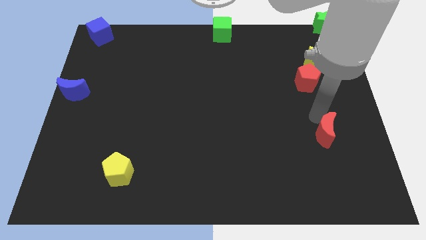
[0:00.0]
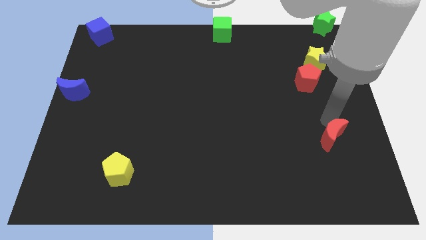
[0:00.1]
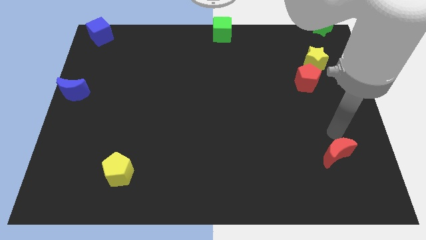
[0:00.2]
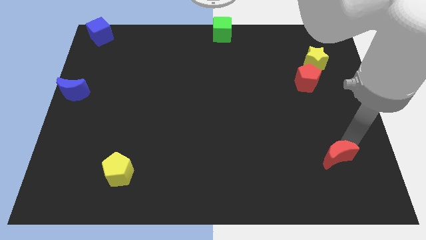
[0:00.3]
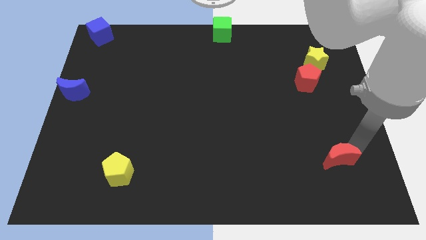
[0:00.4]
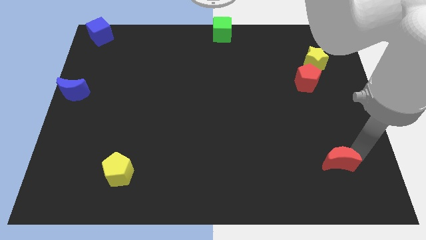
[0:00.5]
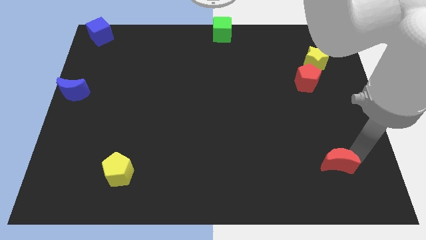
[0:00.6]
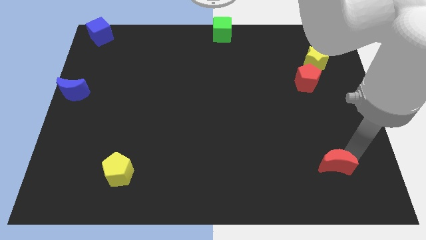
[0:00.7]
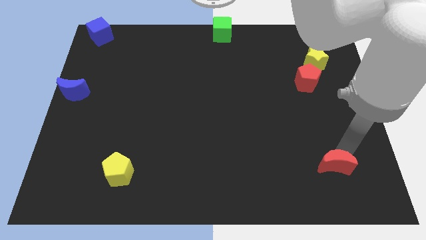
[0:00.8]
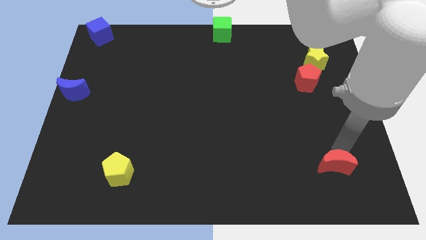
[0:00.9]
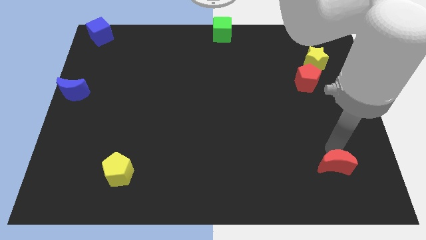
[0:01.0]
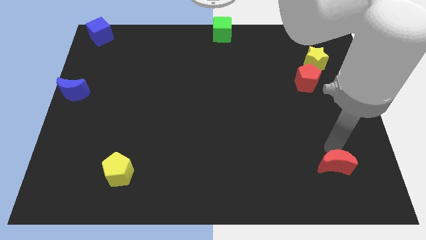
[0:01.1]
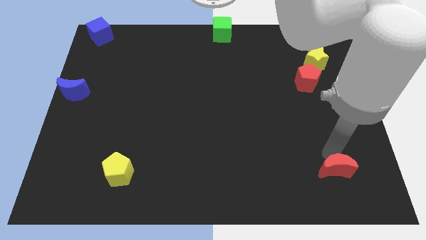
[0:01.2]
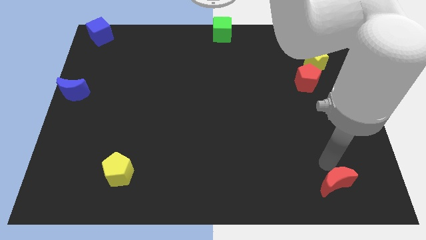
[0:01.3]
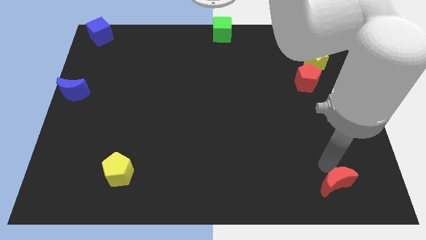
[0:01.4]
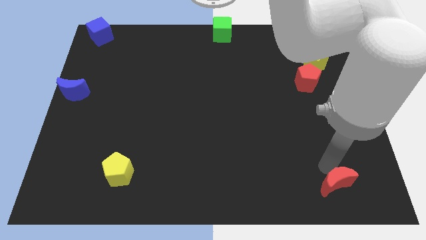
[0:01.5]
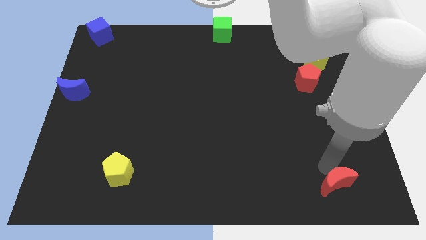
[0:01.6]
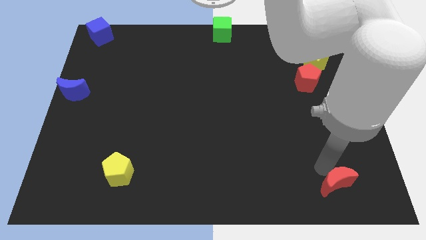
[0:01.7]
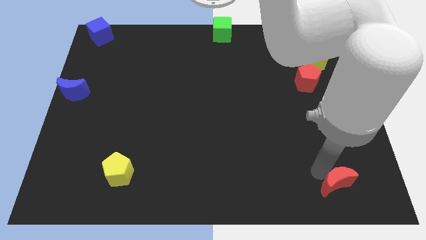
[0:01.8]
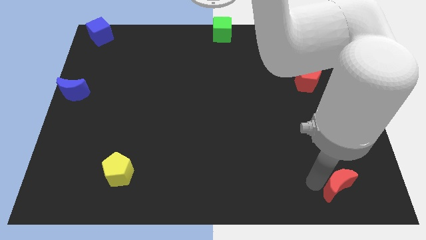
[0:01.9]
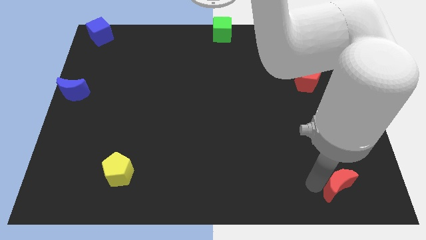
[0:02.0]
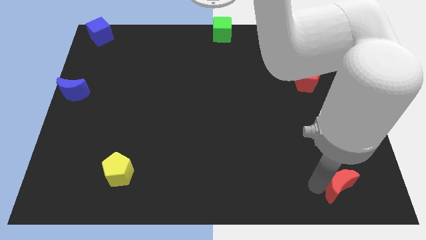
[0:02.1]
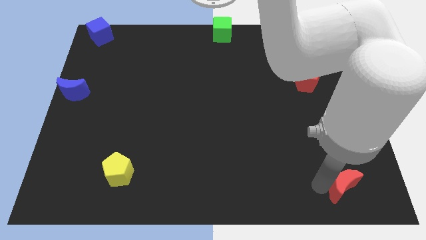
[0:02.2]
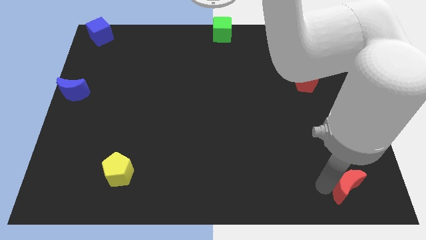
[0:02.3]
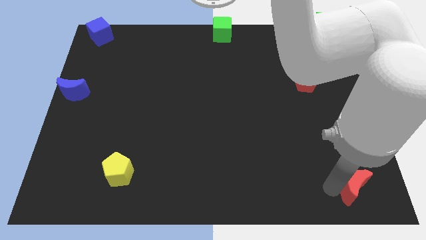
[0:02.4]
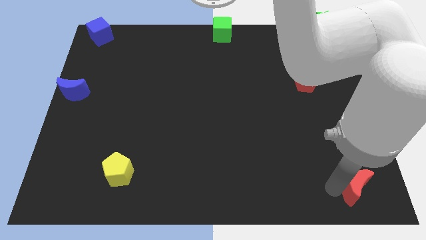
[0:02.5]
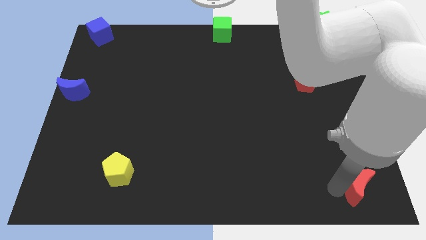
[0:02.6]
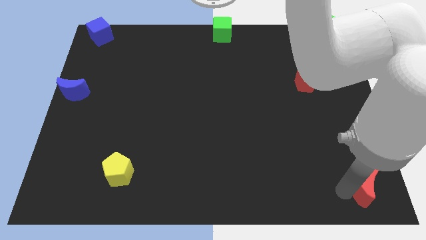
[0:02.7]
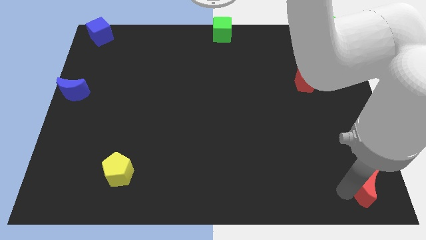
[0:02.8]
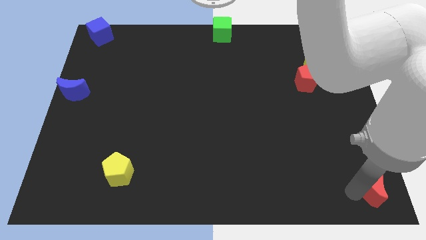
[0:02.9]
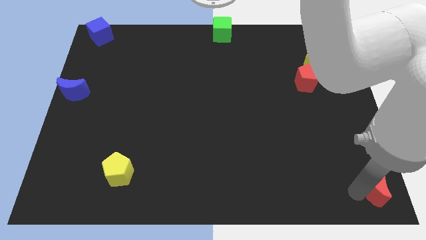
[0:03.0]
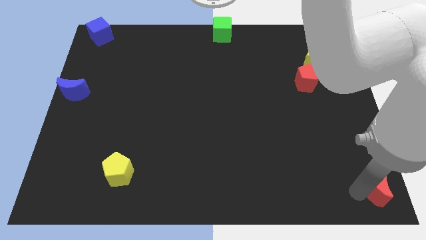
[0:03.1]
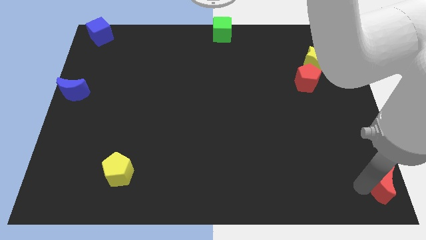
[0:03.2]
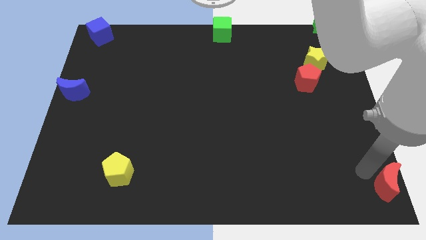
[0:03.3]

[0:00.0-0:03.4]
place red crescent towards bottom right end

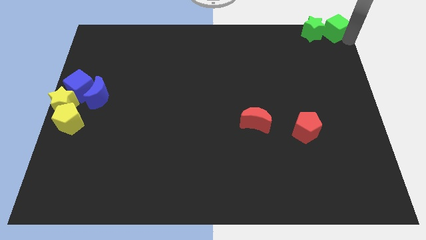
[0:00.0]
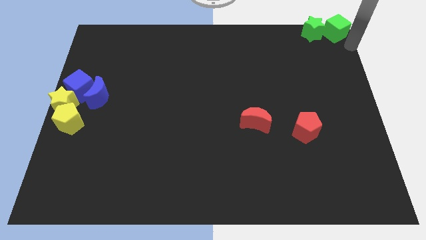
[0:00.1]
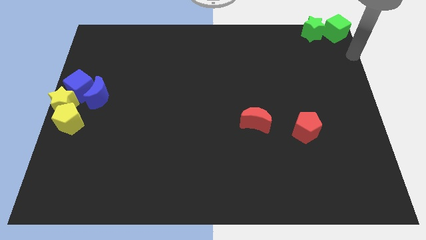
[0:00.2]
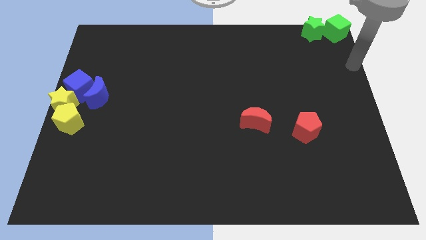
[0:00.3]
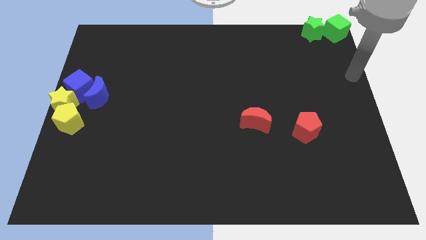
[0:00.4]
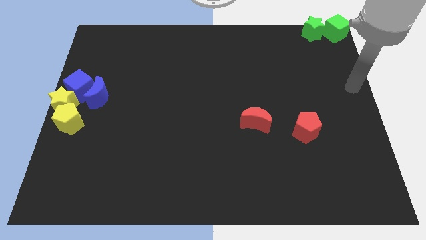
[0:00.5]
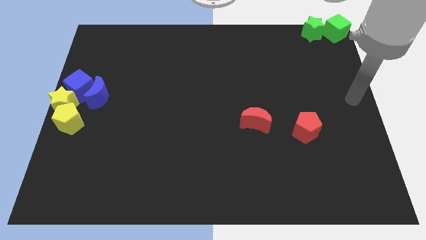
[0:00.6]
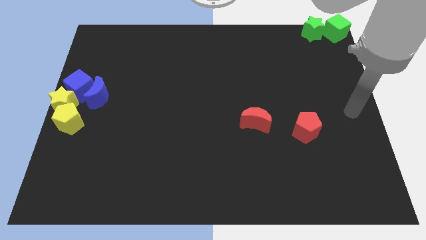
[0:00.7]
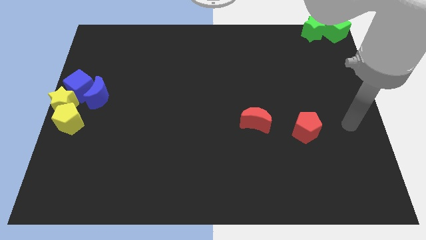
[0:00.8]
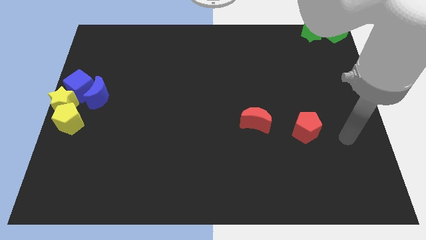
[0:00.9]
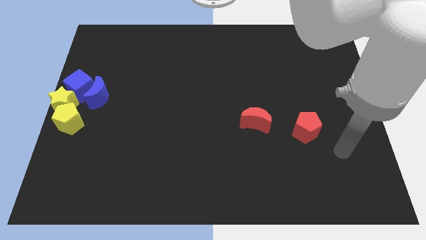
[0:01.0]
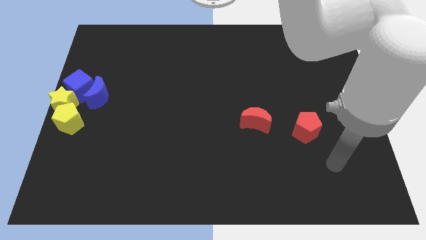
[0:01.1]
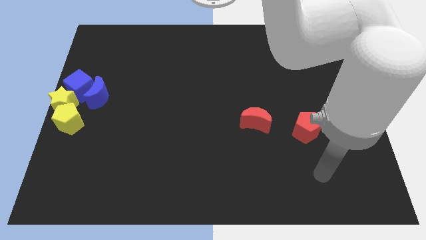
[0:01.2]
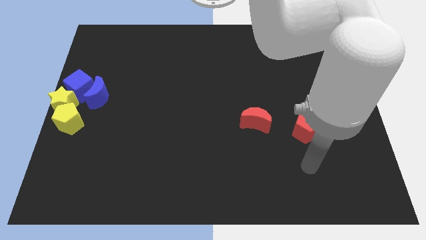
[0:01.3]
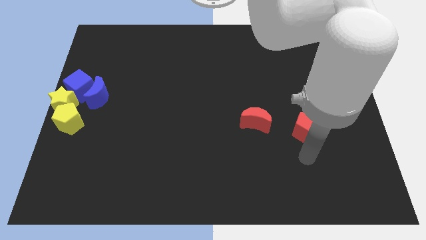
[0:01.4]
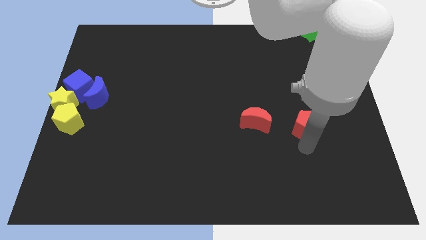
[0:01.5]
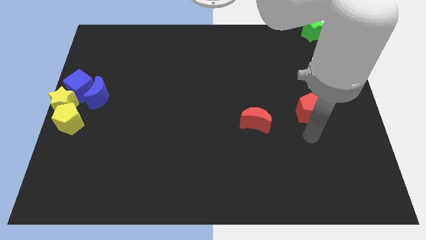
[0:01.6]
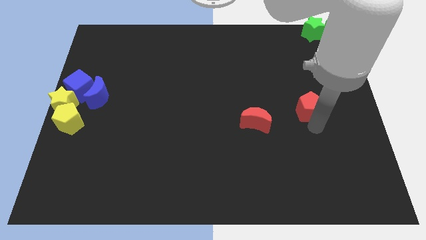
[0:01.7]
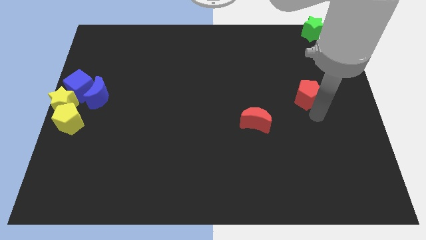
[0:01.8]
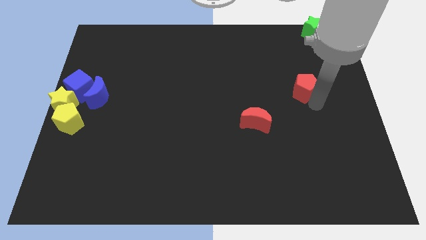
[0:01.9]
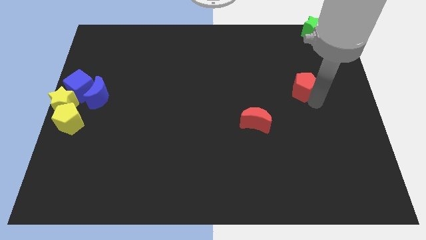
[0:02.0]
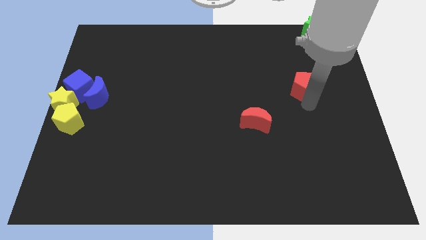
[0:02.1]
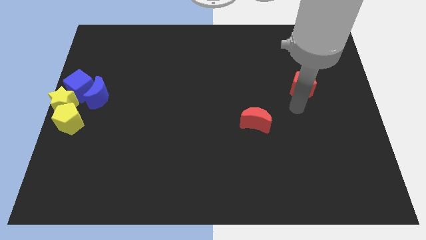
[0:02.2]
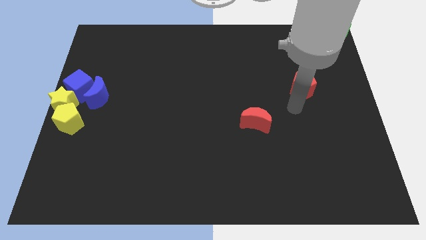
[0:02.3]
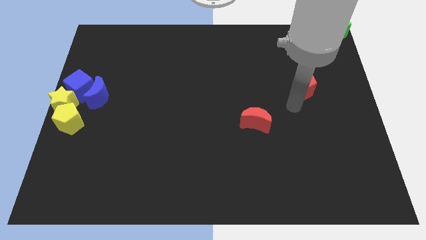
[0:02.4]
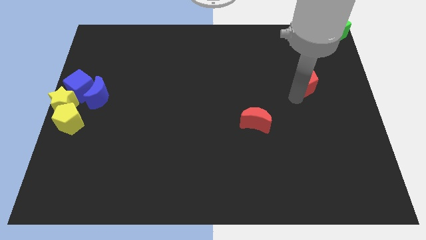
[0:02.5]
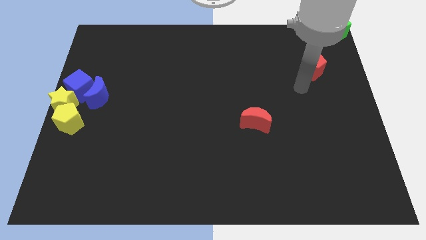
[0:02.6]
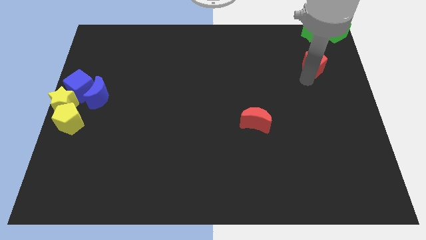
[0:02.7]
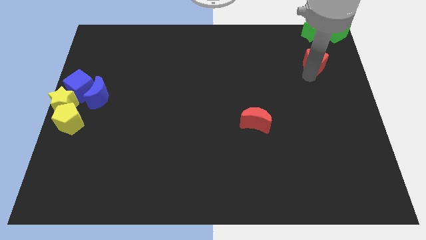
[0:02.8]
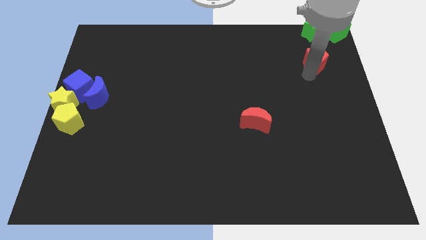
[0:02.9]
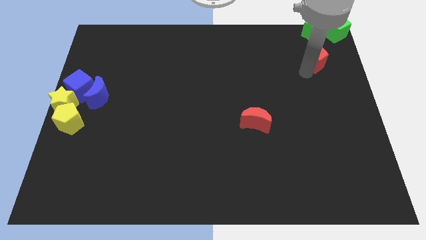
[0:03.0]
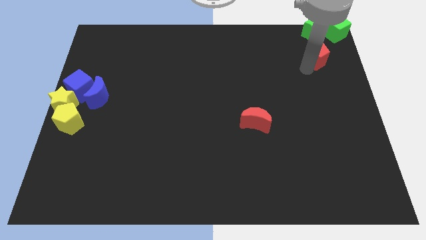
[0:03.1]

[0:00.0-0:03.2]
move the red pentagon down to the green star

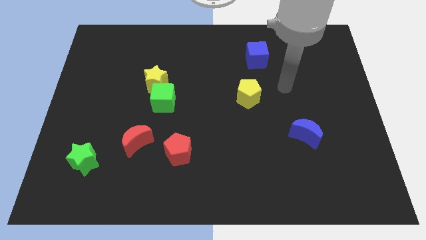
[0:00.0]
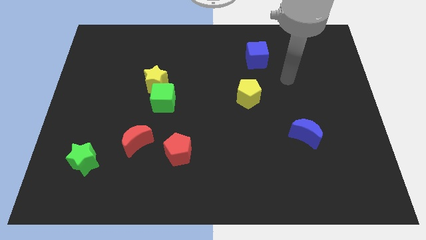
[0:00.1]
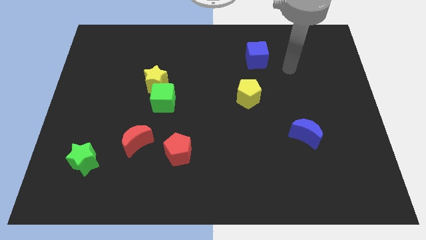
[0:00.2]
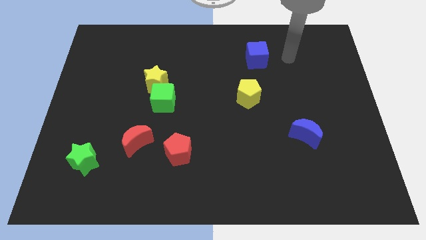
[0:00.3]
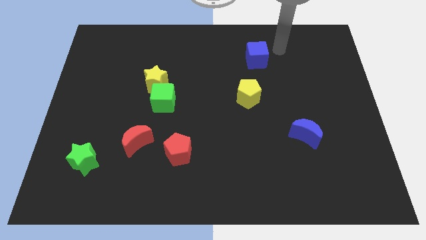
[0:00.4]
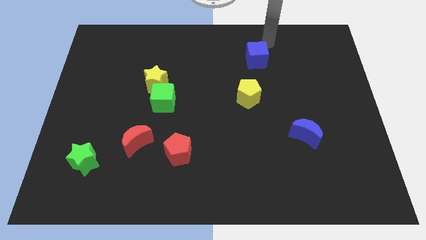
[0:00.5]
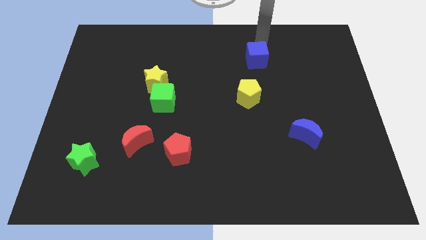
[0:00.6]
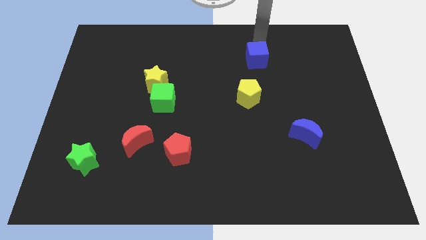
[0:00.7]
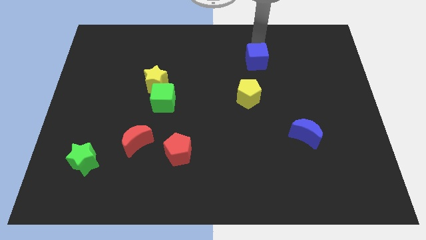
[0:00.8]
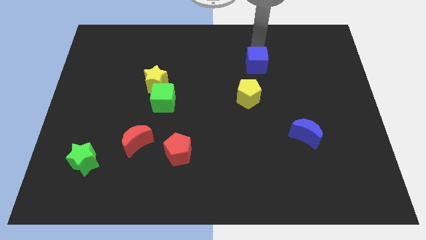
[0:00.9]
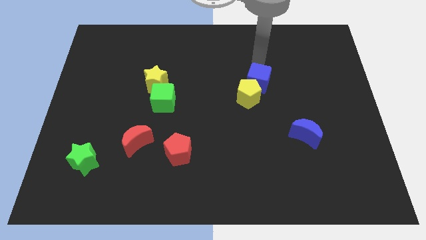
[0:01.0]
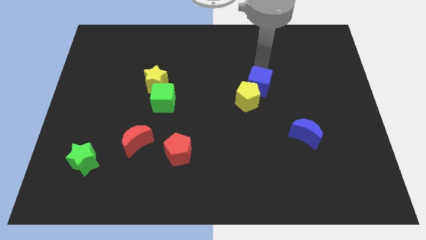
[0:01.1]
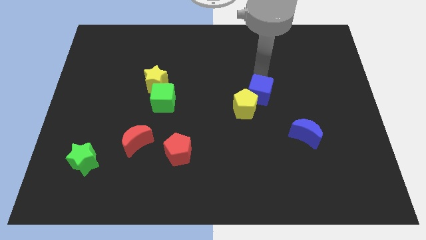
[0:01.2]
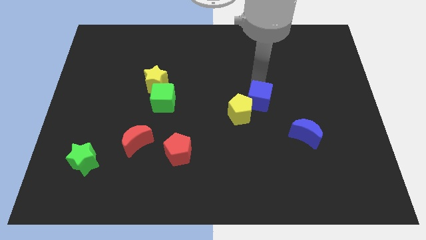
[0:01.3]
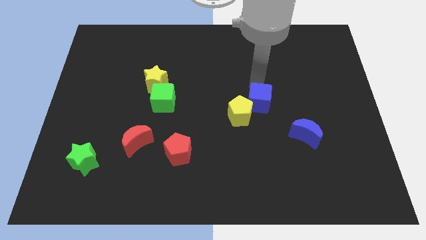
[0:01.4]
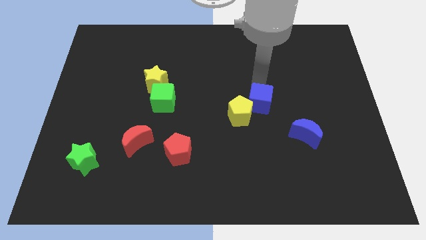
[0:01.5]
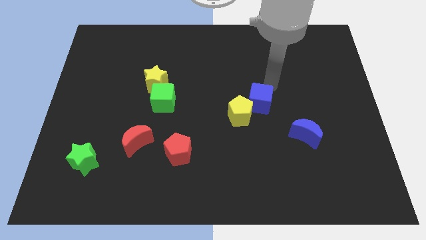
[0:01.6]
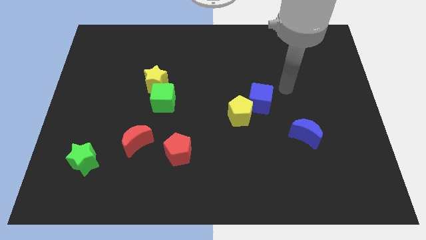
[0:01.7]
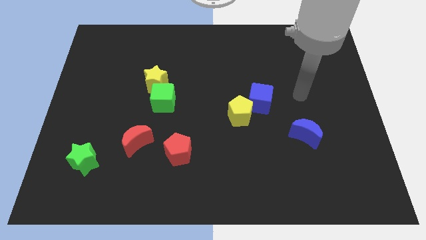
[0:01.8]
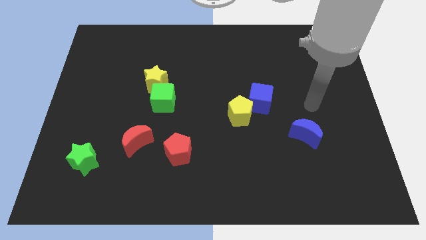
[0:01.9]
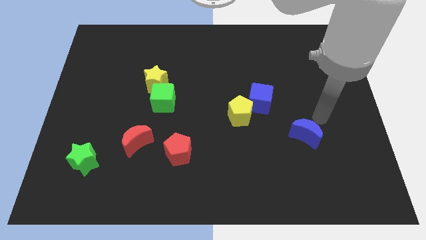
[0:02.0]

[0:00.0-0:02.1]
push the yellow pentagon with the blue cube towards the bottom

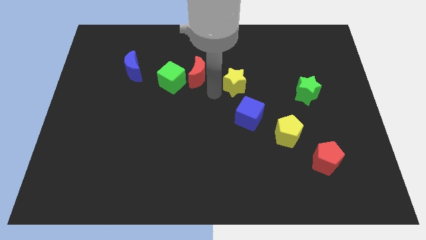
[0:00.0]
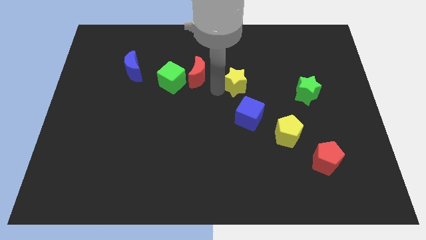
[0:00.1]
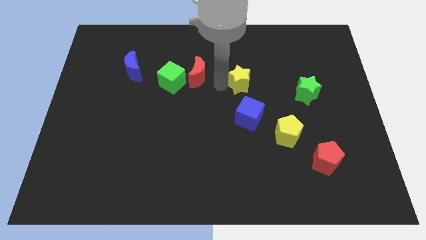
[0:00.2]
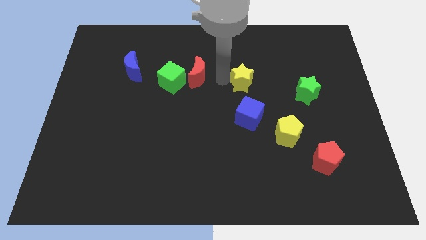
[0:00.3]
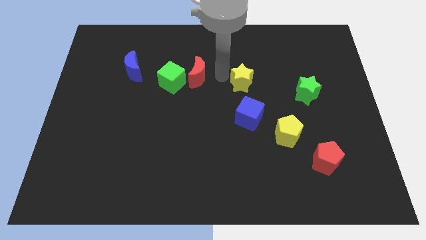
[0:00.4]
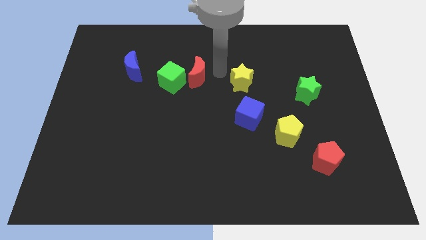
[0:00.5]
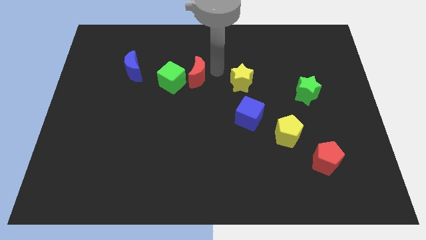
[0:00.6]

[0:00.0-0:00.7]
slightly push the yellow star diagonally left to the blue cube
